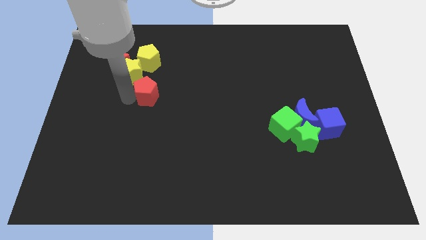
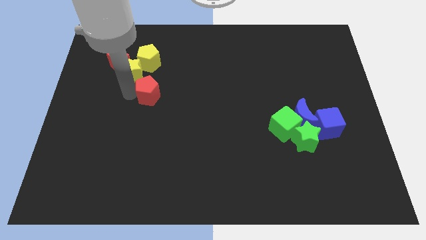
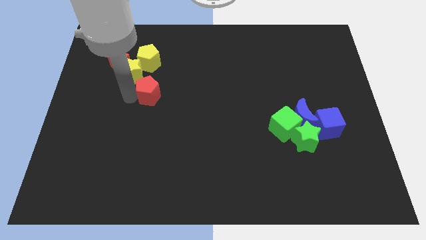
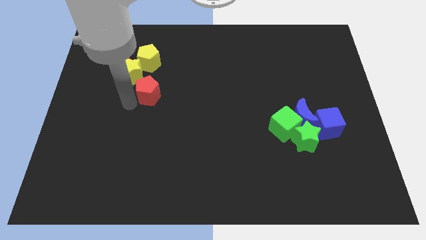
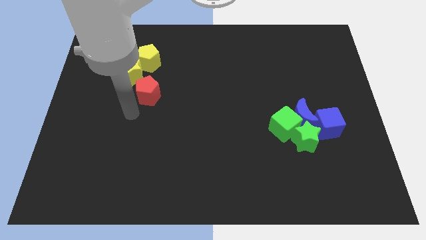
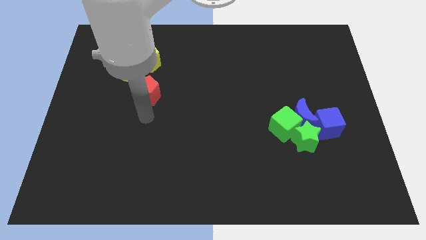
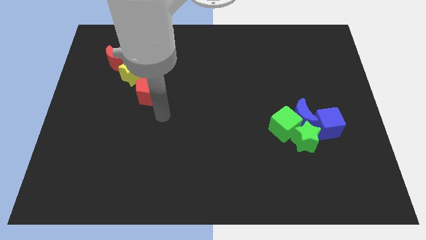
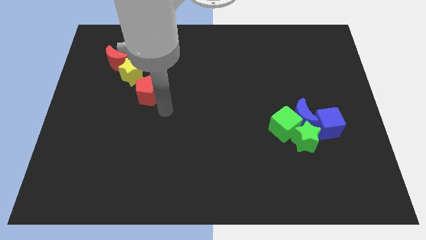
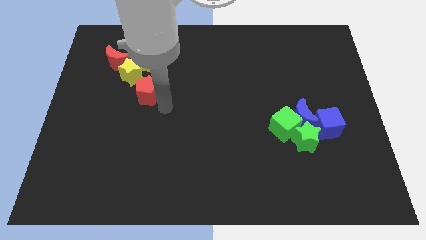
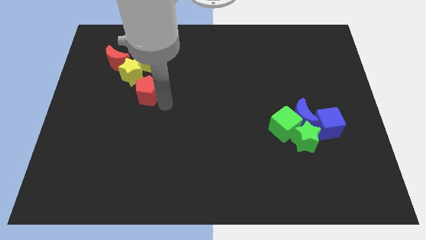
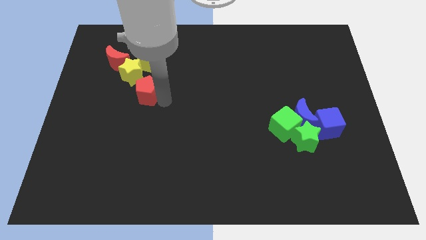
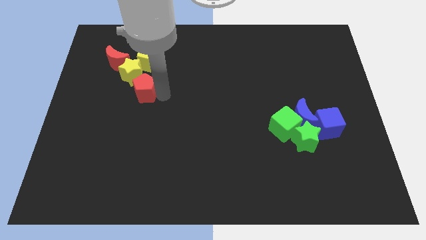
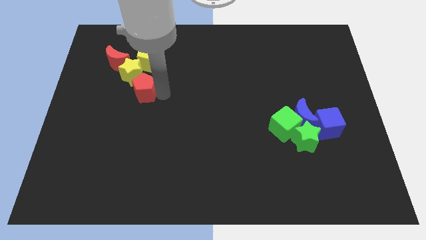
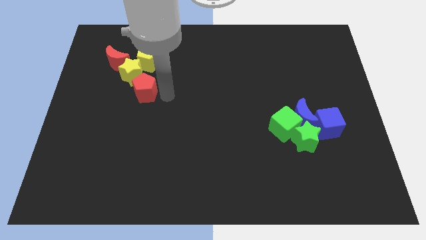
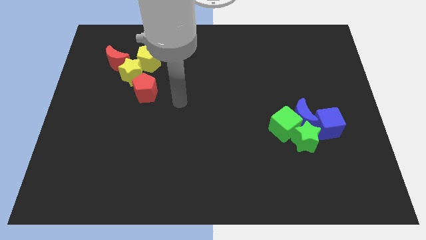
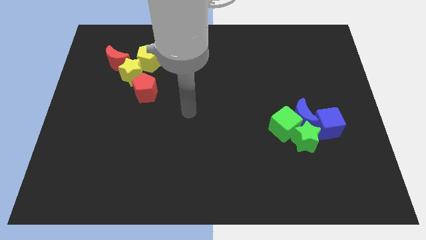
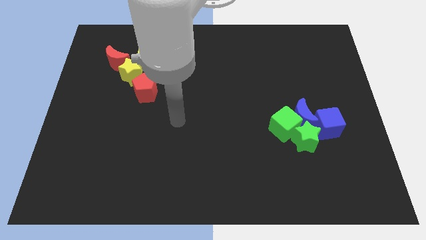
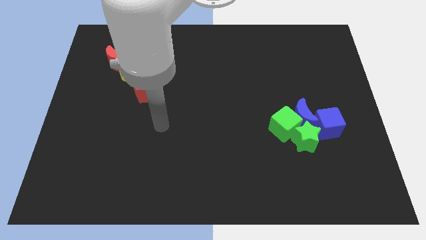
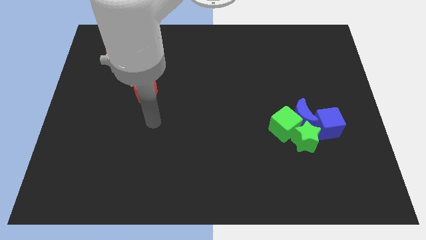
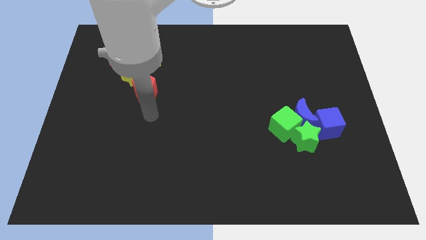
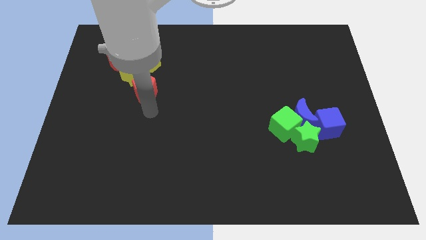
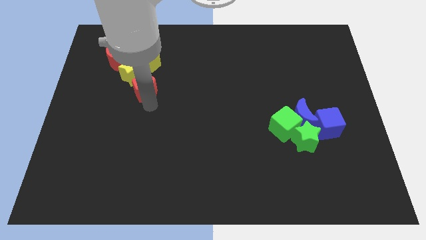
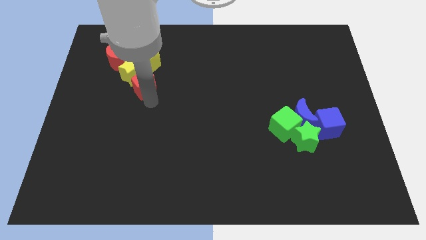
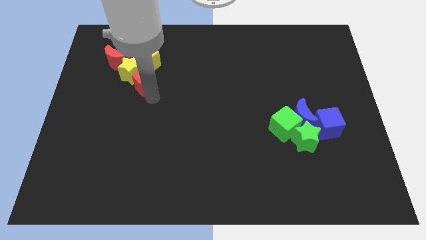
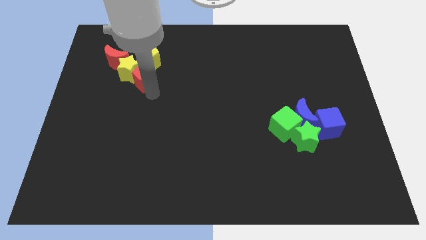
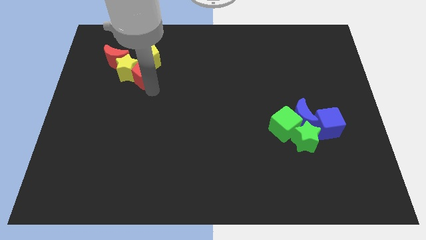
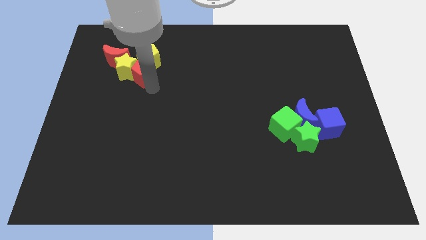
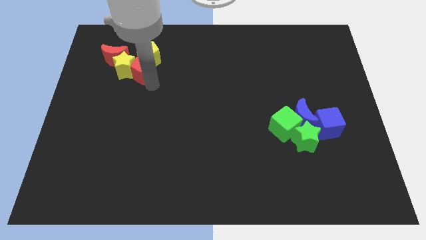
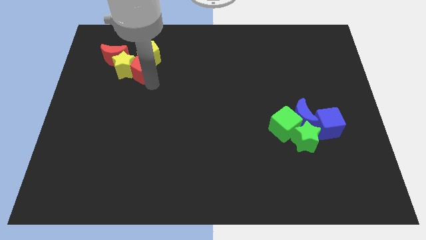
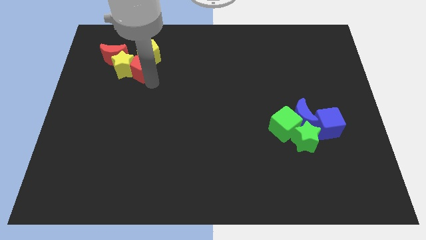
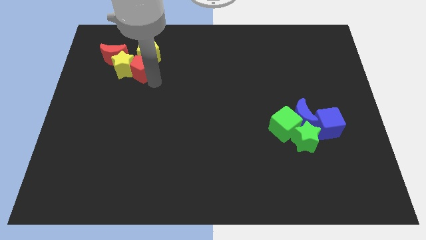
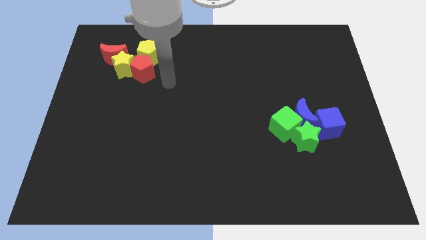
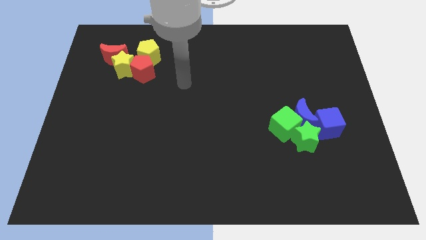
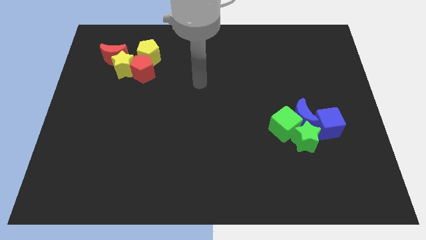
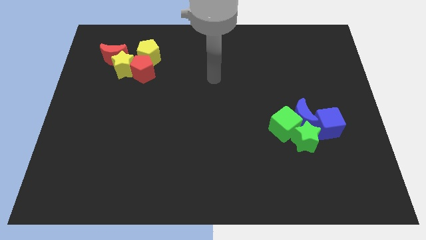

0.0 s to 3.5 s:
move the red pentagon into the group of blocks

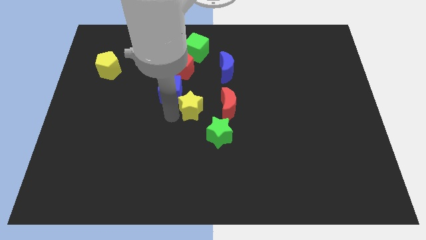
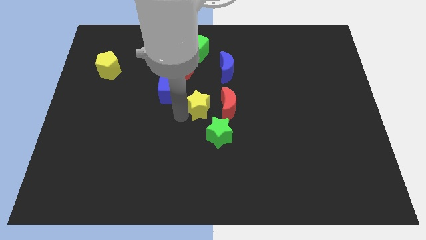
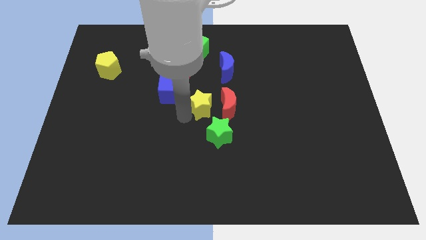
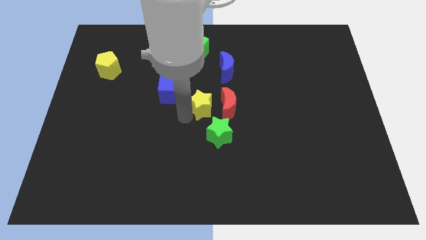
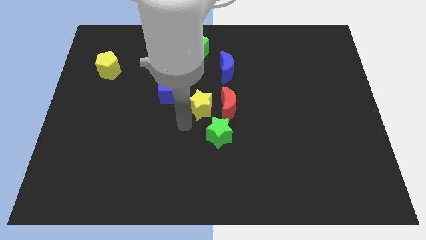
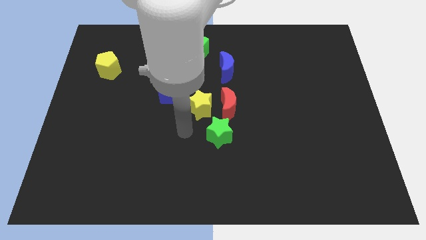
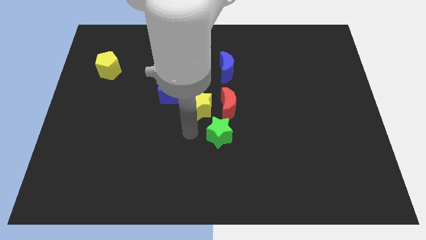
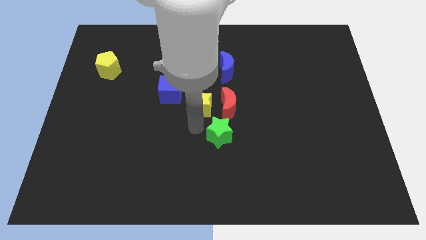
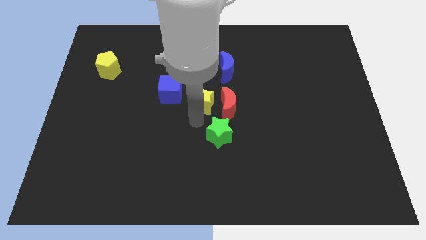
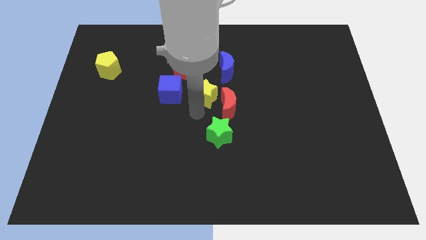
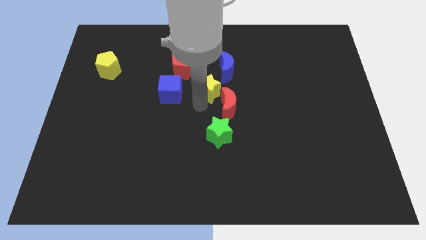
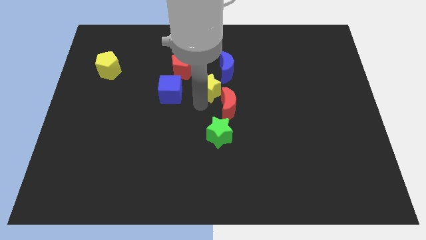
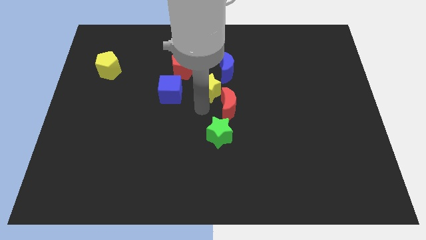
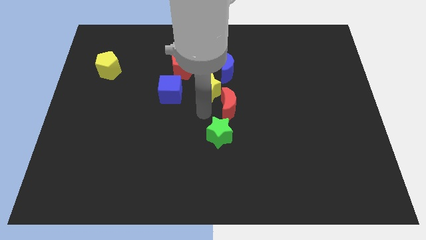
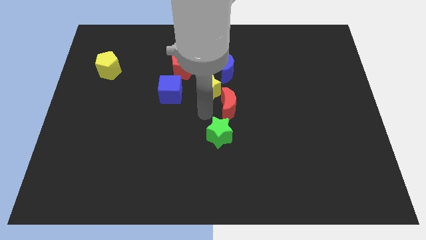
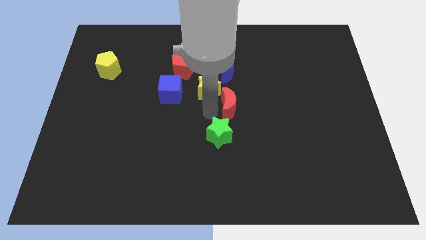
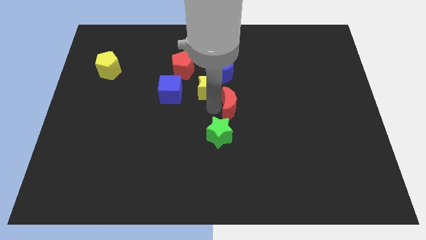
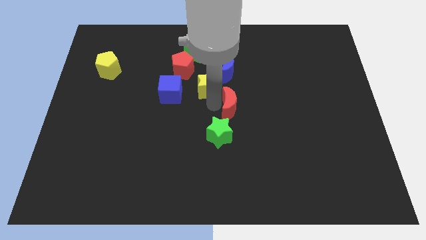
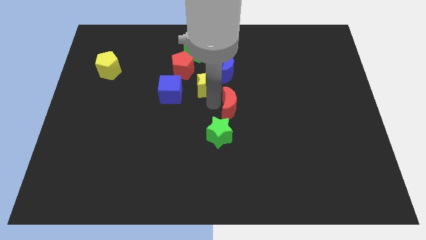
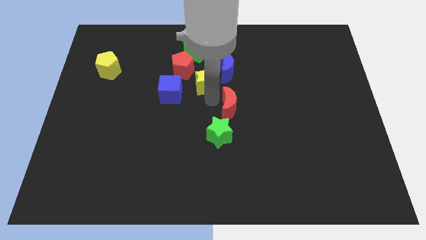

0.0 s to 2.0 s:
push the yellow star near to the red pentagon

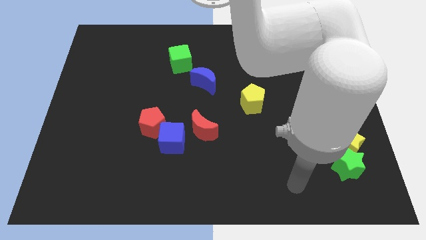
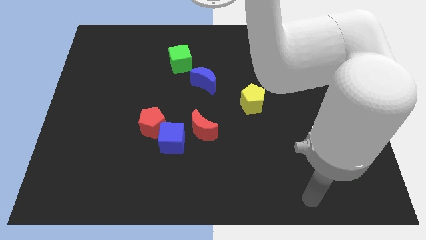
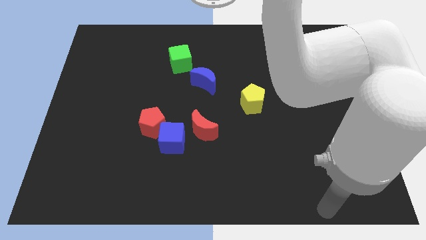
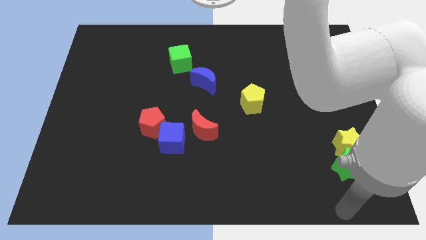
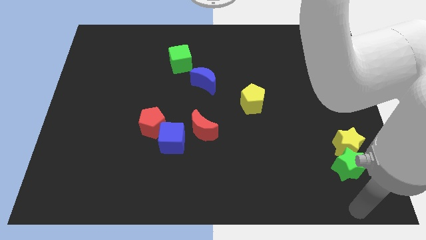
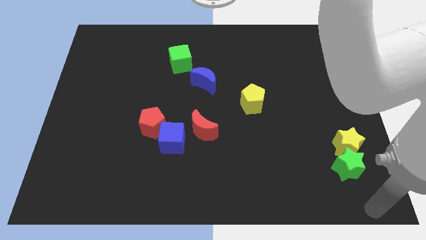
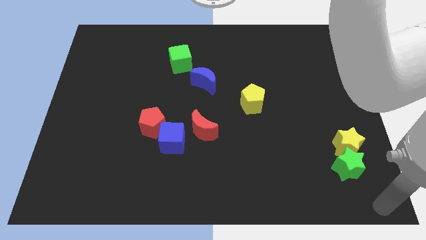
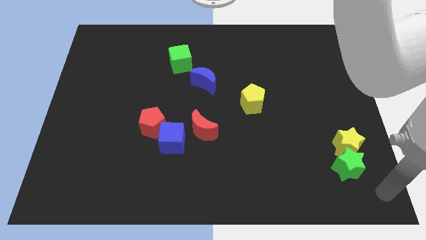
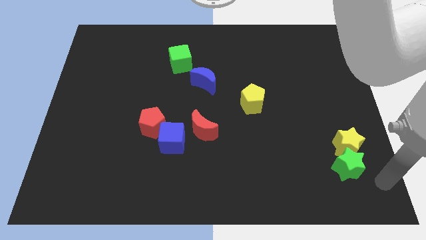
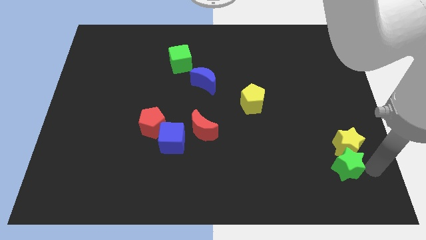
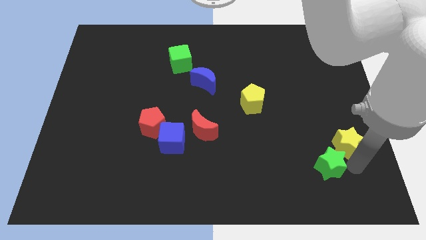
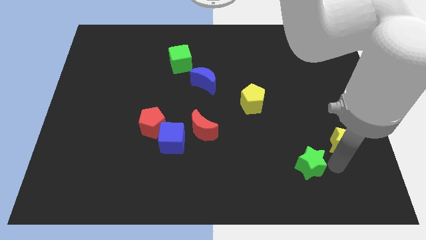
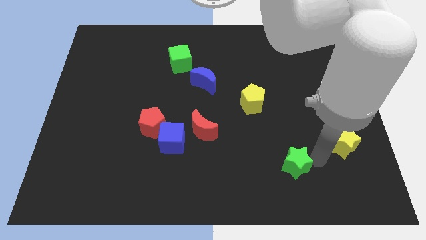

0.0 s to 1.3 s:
separate the green star from the yellow star

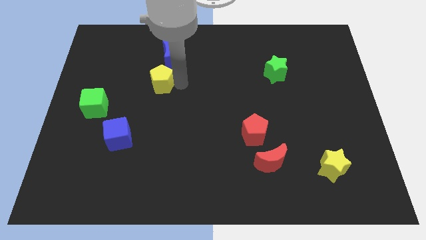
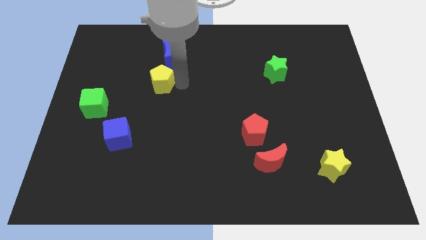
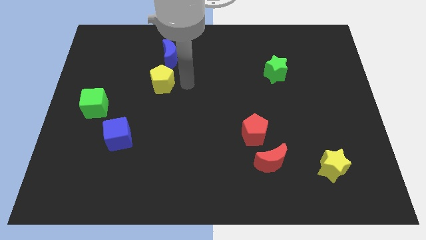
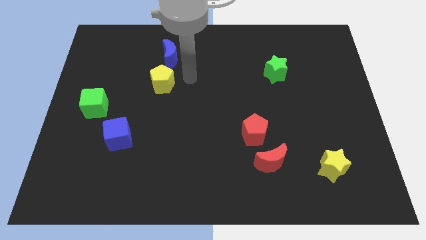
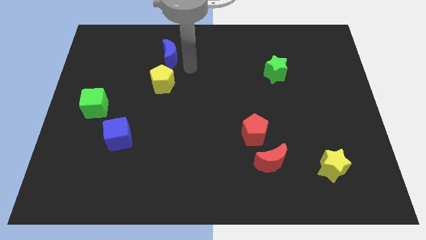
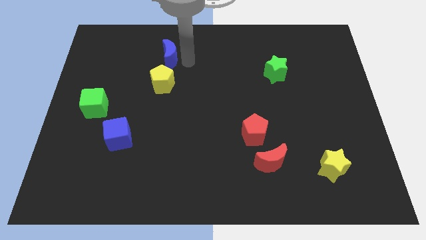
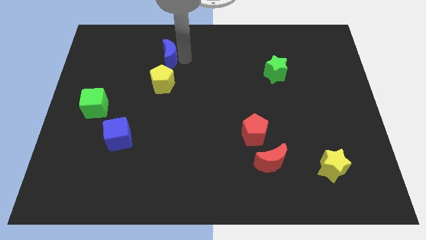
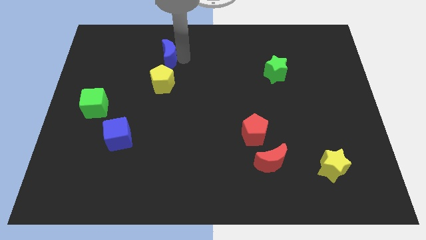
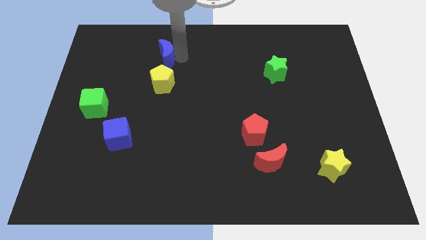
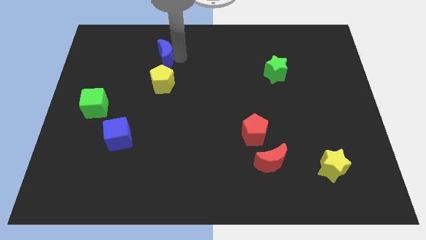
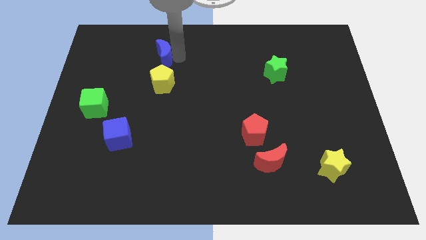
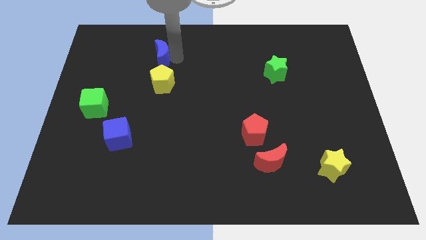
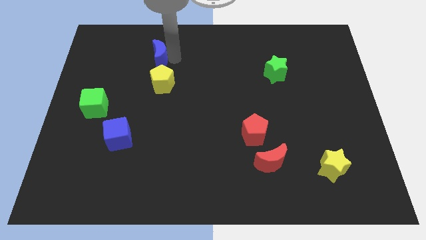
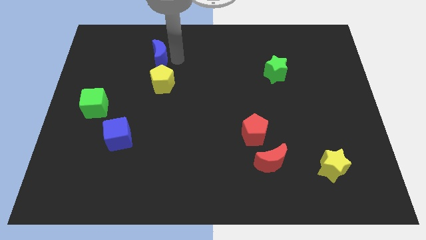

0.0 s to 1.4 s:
place blue moon to the top of the yellow pentagon

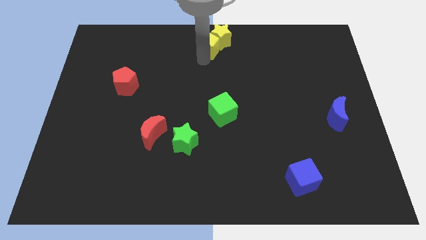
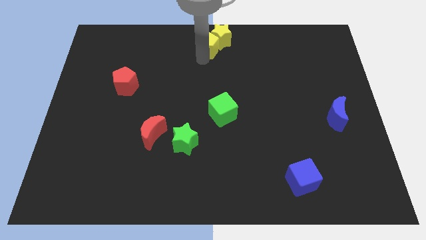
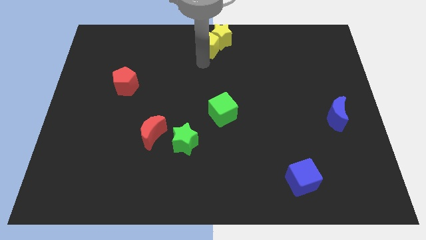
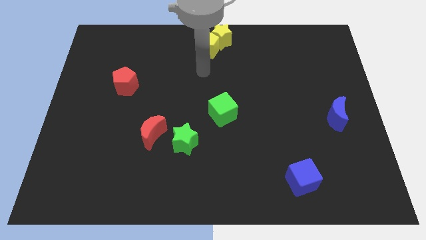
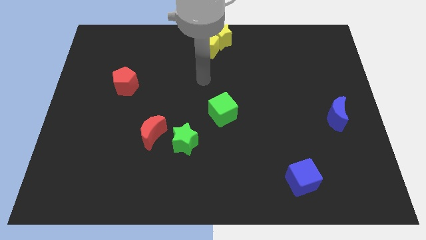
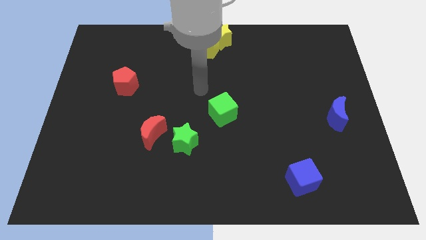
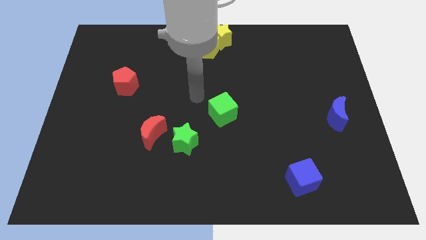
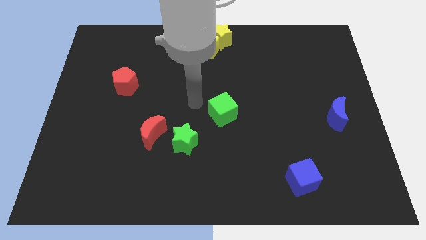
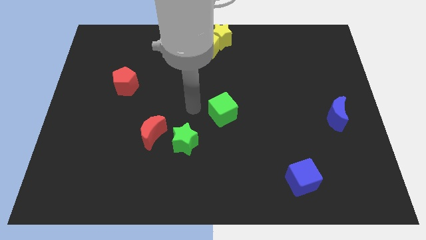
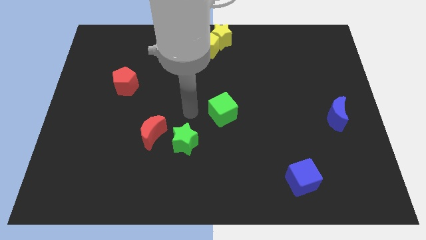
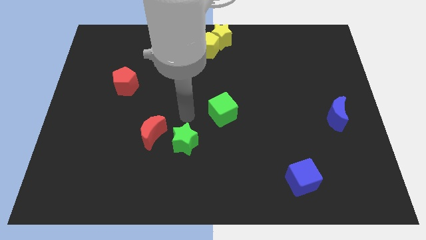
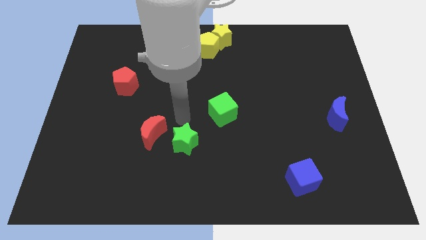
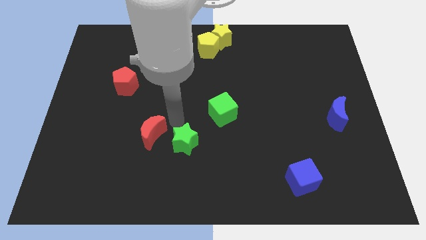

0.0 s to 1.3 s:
move the arm to the top of the green star
